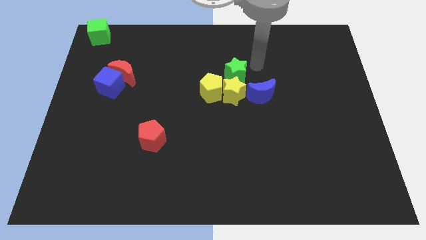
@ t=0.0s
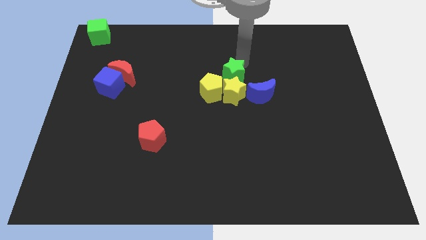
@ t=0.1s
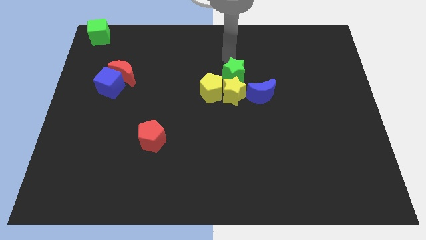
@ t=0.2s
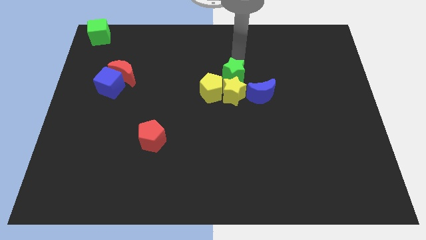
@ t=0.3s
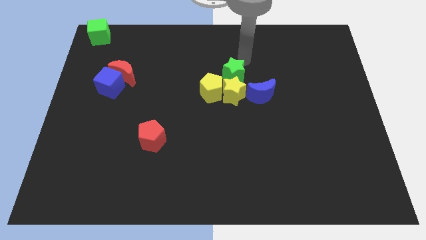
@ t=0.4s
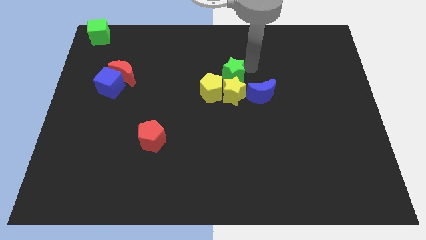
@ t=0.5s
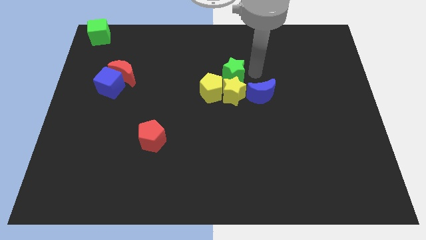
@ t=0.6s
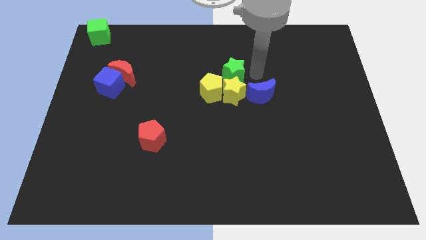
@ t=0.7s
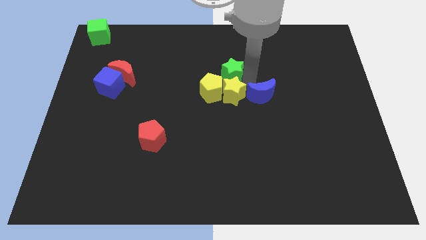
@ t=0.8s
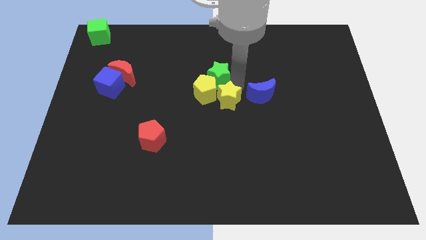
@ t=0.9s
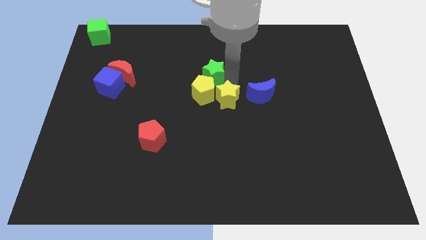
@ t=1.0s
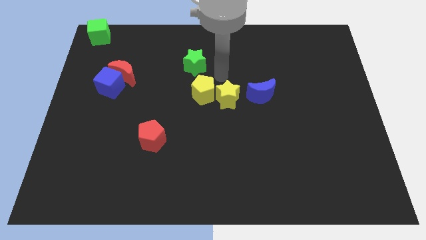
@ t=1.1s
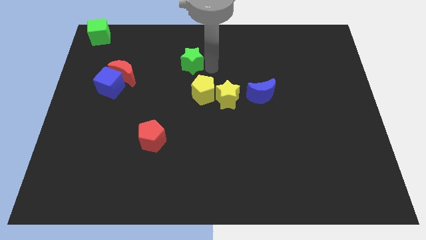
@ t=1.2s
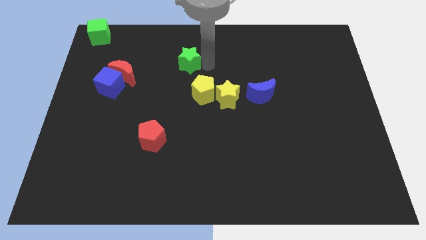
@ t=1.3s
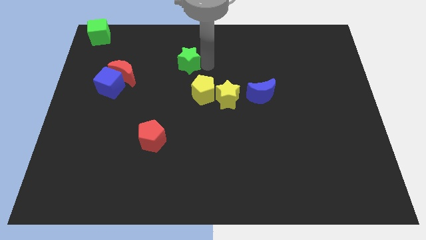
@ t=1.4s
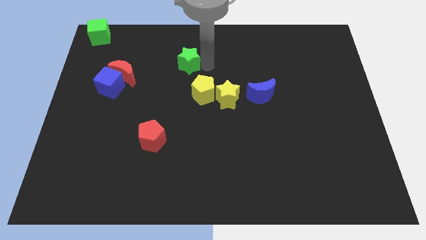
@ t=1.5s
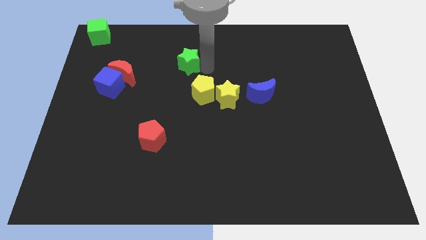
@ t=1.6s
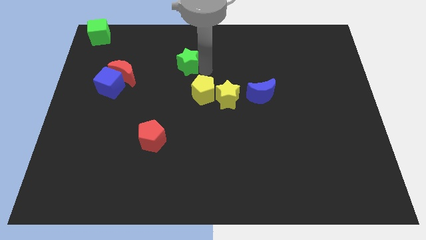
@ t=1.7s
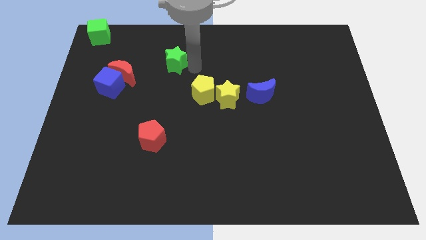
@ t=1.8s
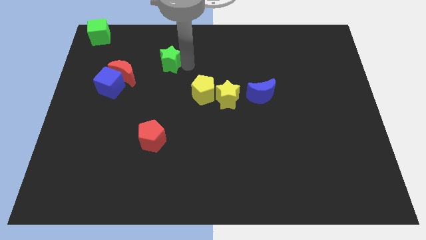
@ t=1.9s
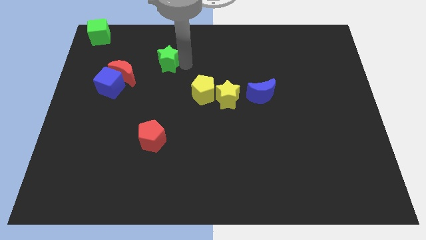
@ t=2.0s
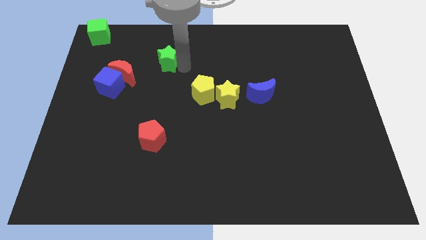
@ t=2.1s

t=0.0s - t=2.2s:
push the green star away from the blue moon

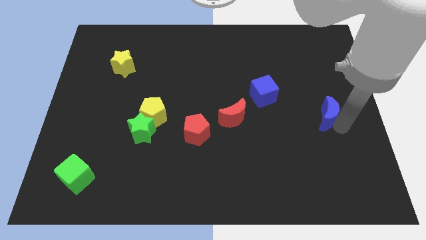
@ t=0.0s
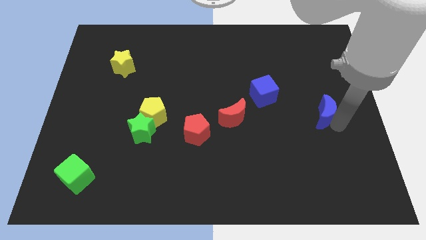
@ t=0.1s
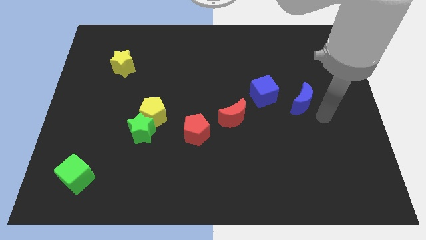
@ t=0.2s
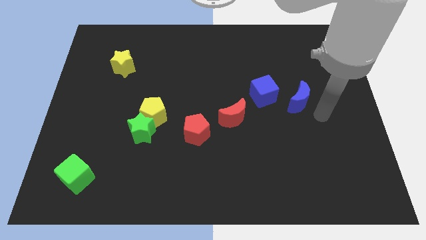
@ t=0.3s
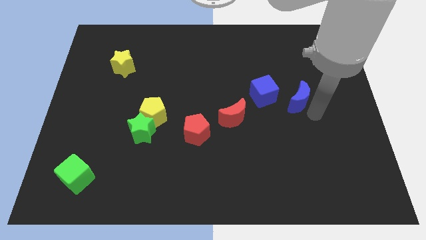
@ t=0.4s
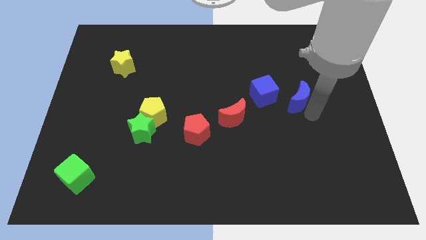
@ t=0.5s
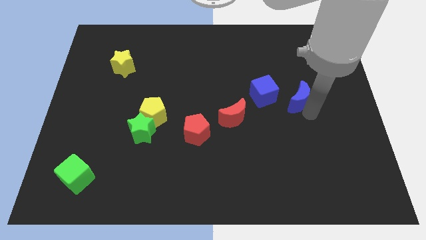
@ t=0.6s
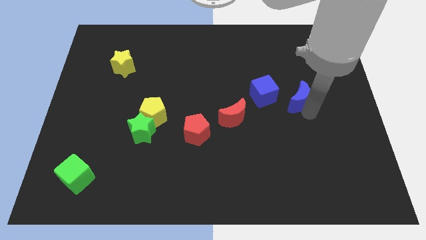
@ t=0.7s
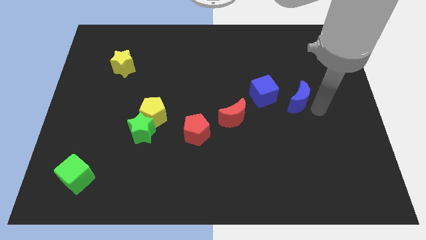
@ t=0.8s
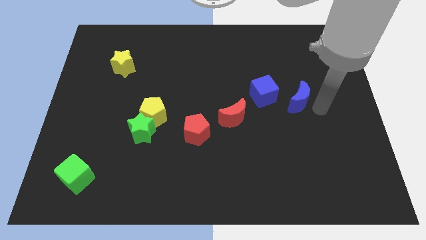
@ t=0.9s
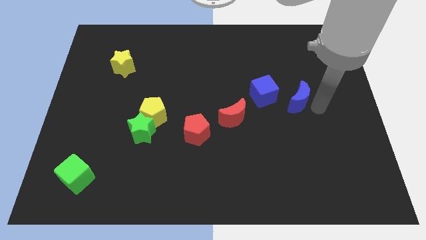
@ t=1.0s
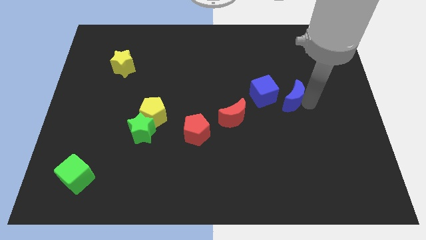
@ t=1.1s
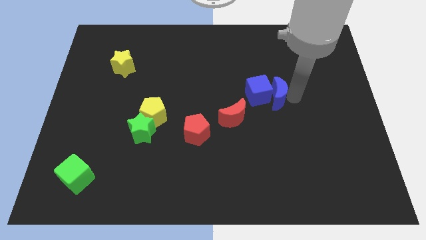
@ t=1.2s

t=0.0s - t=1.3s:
place blue crescent beside blue cube

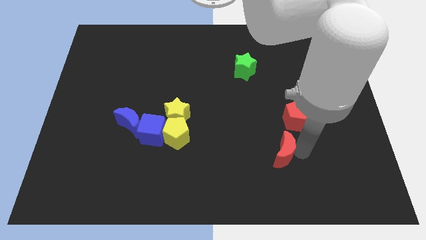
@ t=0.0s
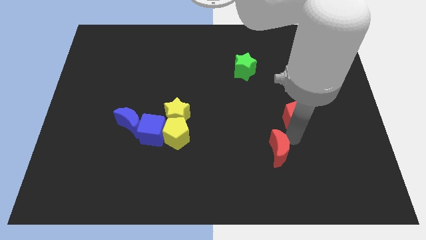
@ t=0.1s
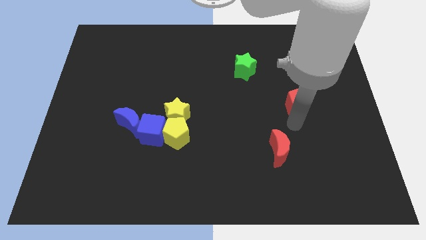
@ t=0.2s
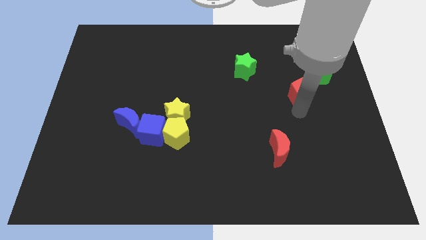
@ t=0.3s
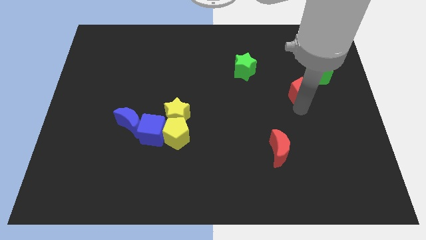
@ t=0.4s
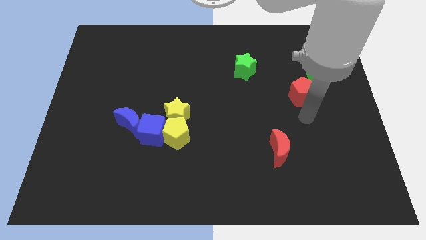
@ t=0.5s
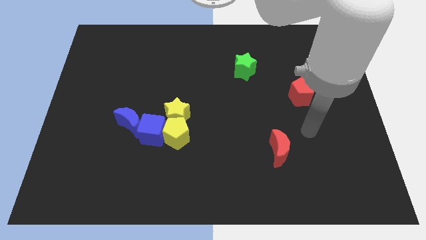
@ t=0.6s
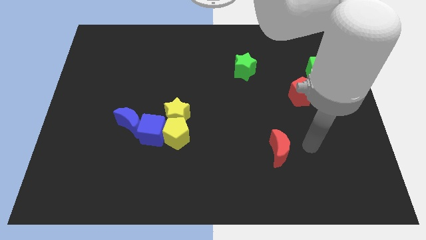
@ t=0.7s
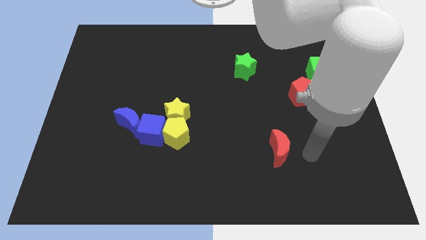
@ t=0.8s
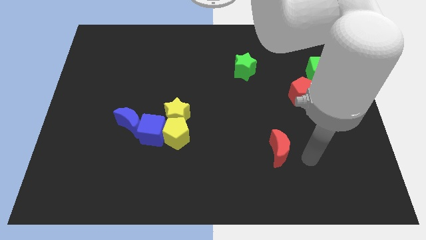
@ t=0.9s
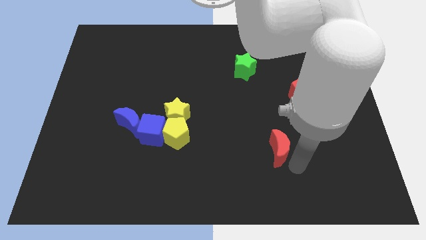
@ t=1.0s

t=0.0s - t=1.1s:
move the red pentagon diagonally bottom left to the green cube

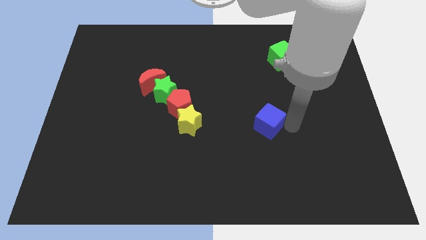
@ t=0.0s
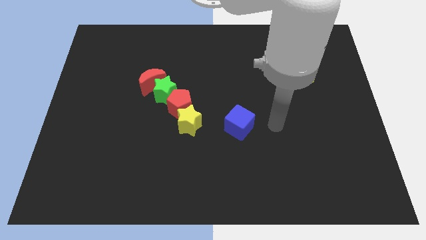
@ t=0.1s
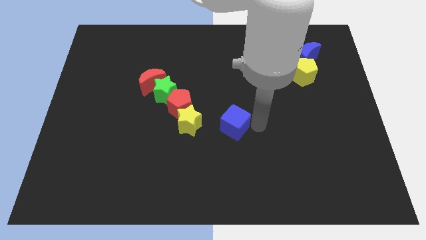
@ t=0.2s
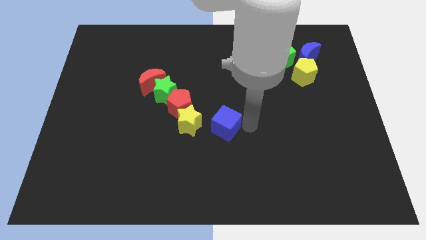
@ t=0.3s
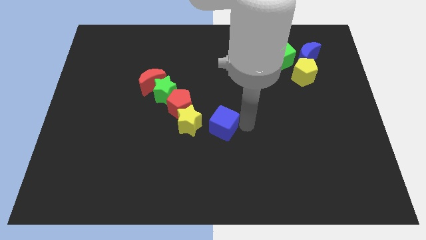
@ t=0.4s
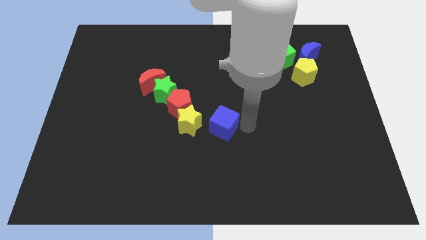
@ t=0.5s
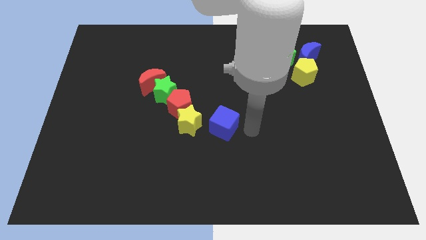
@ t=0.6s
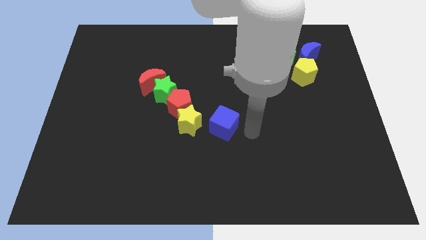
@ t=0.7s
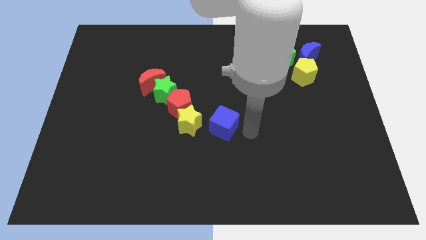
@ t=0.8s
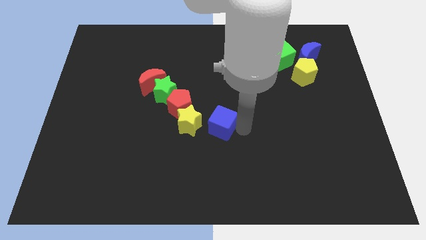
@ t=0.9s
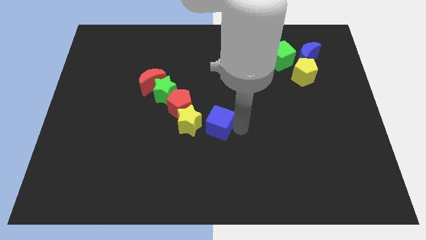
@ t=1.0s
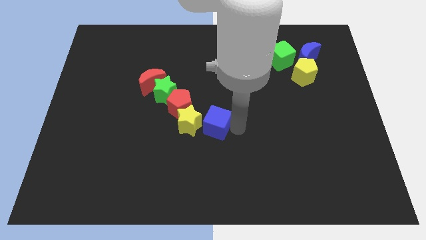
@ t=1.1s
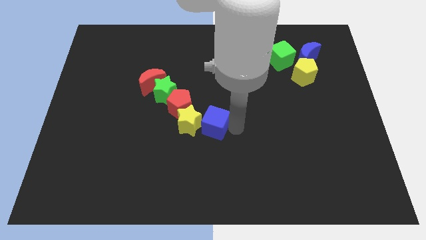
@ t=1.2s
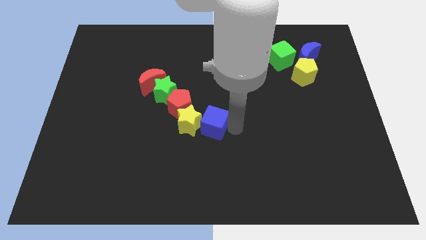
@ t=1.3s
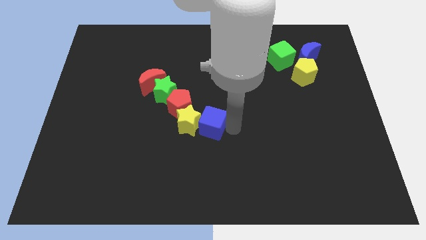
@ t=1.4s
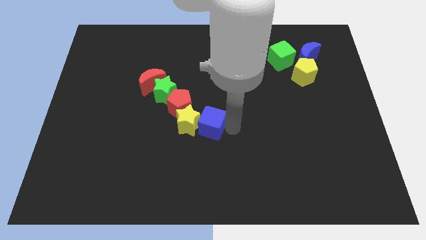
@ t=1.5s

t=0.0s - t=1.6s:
place the blue cube right to the yellow star

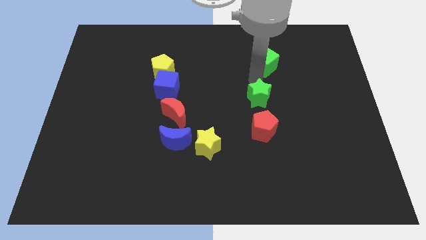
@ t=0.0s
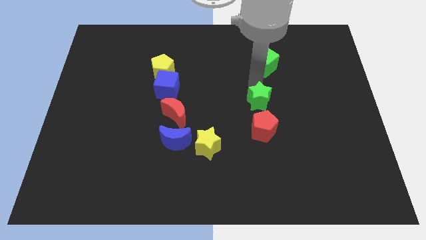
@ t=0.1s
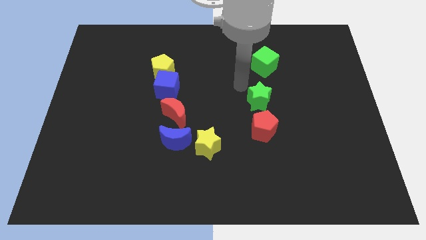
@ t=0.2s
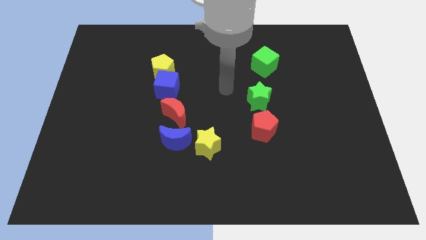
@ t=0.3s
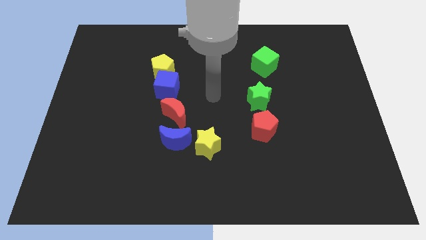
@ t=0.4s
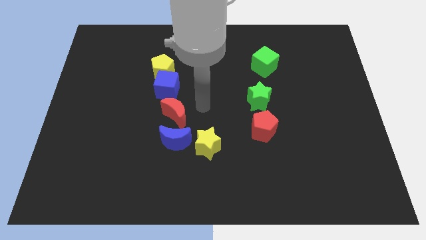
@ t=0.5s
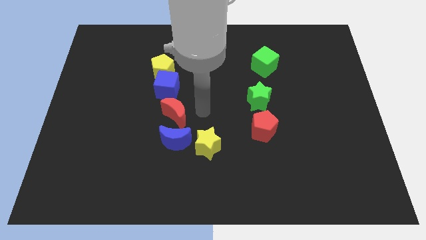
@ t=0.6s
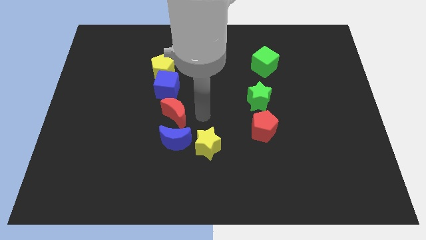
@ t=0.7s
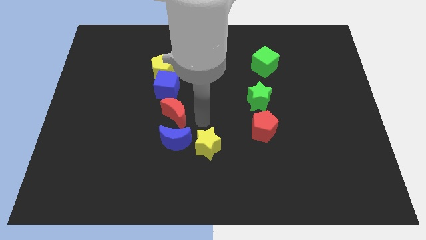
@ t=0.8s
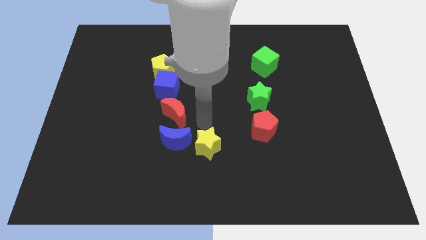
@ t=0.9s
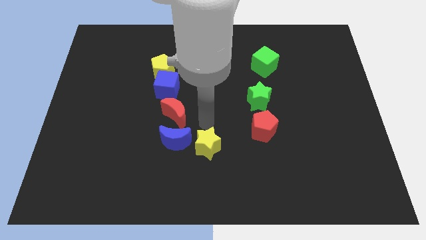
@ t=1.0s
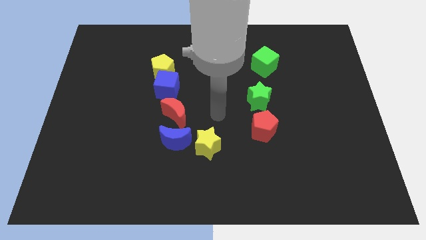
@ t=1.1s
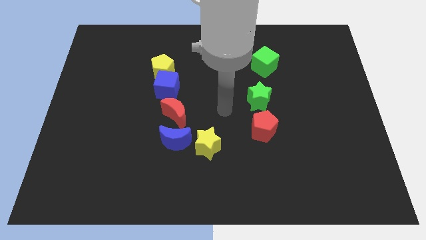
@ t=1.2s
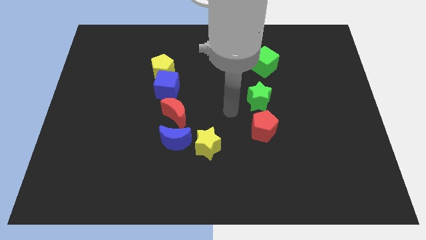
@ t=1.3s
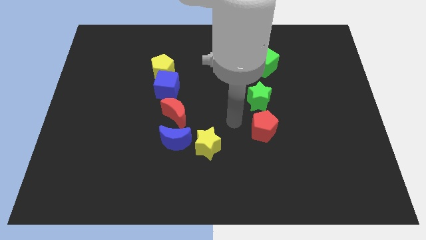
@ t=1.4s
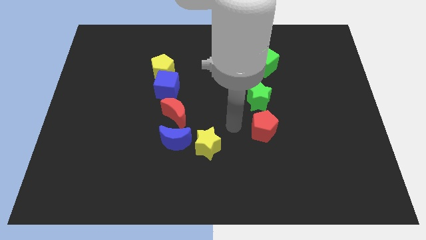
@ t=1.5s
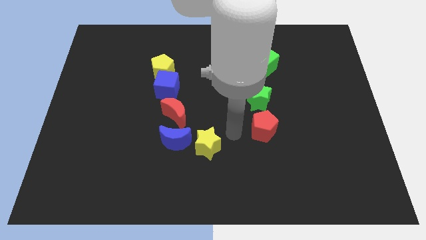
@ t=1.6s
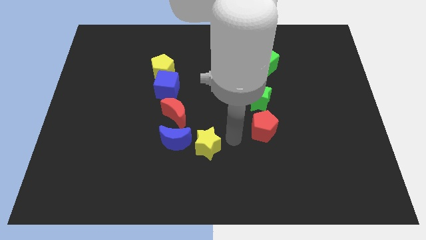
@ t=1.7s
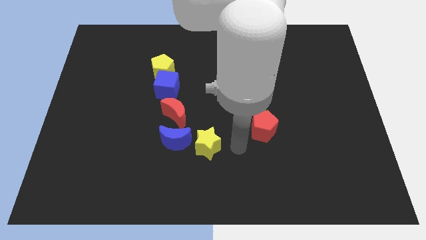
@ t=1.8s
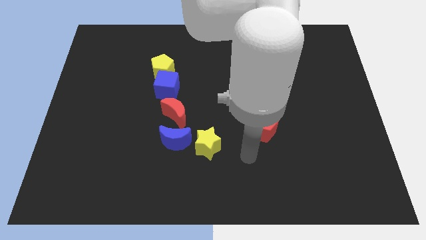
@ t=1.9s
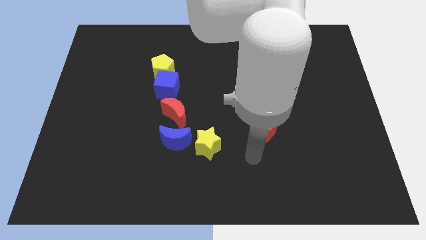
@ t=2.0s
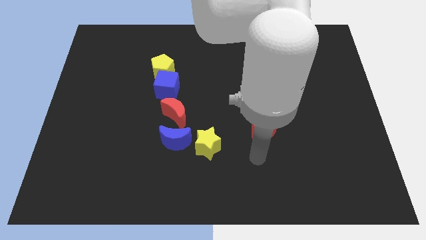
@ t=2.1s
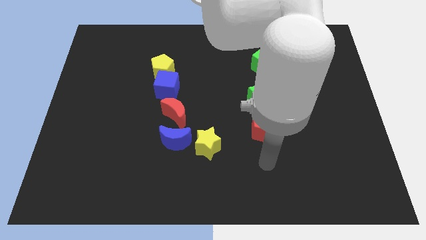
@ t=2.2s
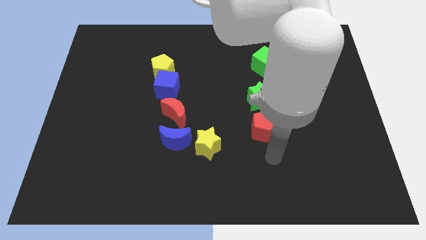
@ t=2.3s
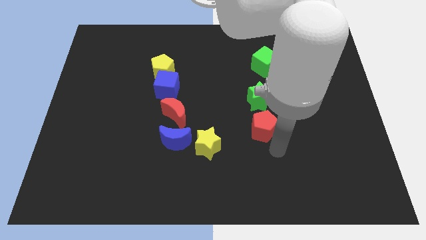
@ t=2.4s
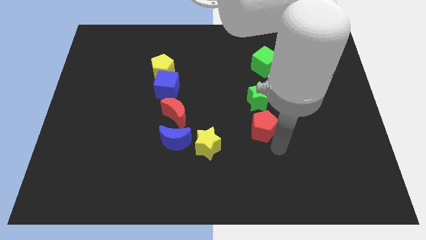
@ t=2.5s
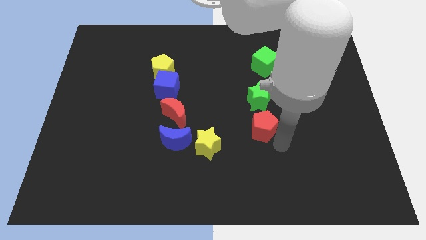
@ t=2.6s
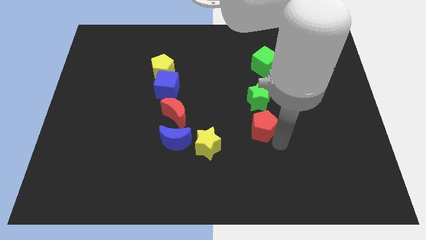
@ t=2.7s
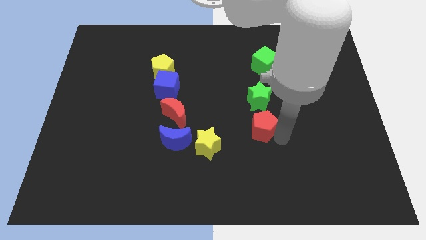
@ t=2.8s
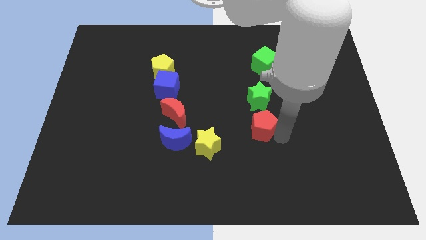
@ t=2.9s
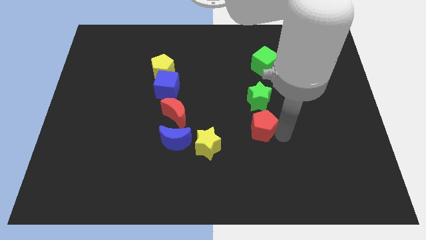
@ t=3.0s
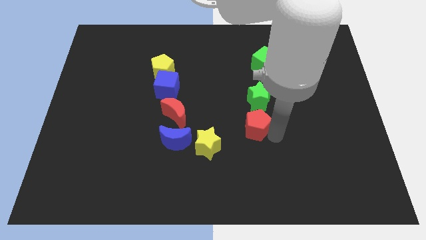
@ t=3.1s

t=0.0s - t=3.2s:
touch the right side of the red pentagon
